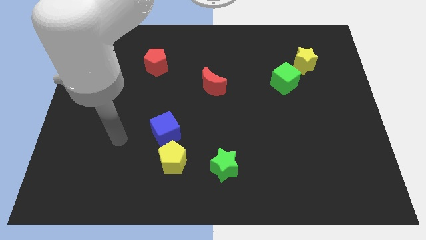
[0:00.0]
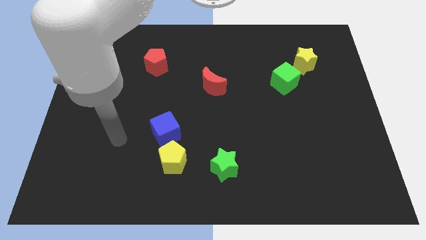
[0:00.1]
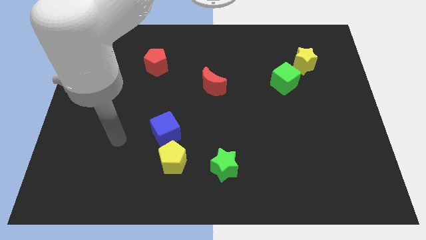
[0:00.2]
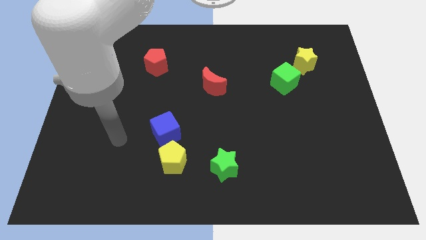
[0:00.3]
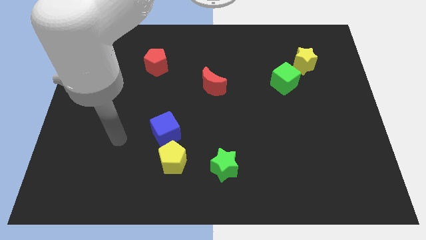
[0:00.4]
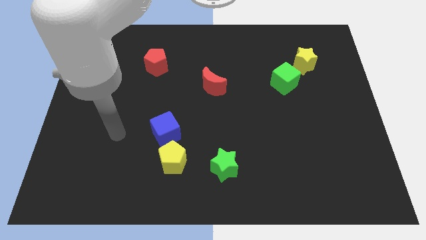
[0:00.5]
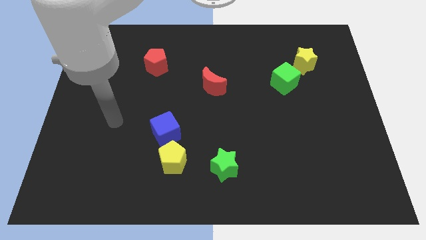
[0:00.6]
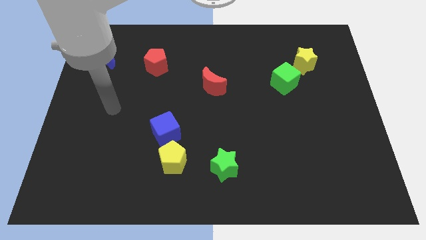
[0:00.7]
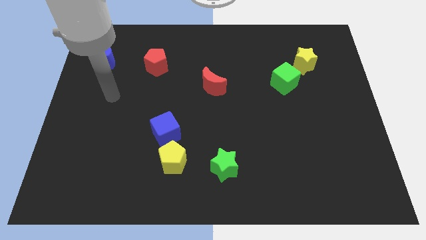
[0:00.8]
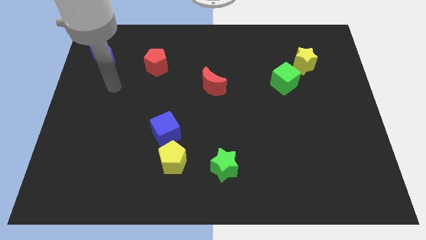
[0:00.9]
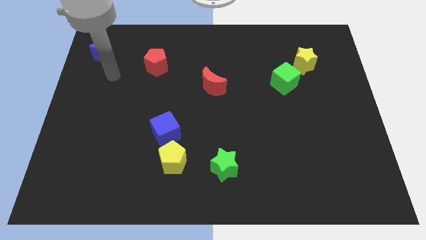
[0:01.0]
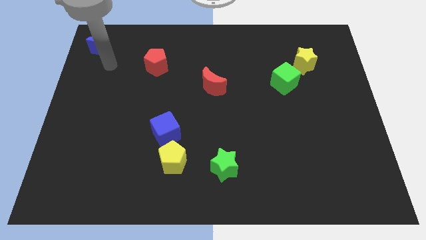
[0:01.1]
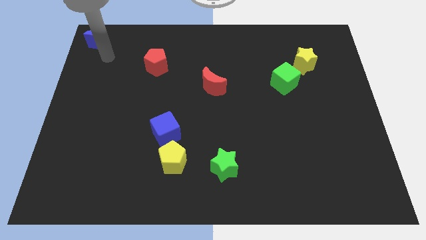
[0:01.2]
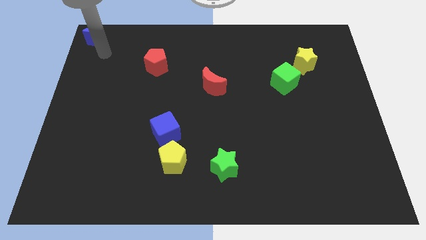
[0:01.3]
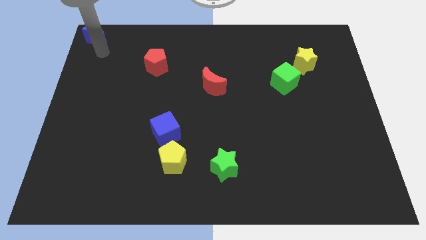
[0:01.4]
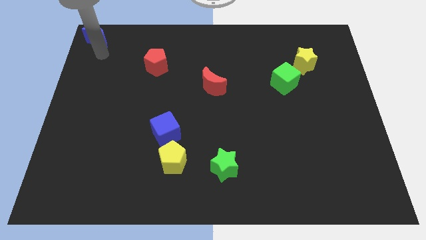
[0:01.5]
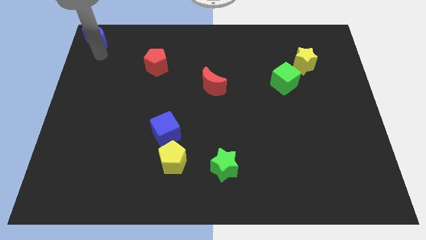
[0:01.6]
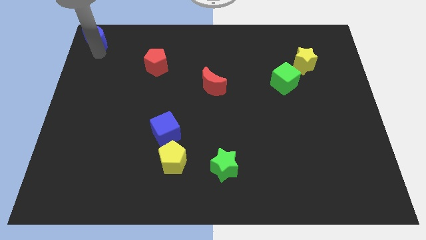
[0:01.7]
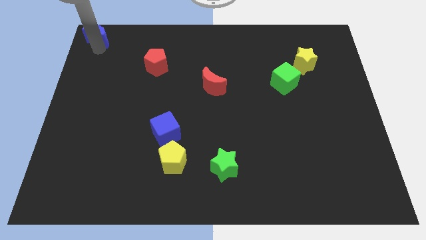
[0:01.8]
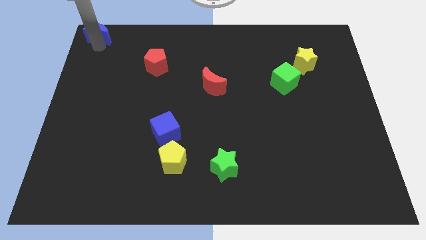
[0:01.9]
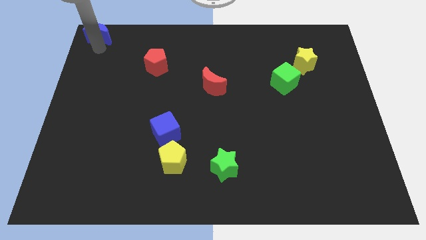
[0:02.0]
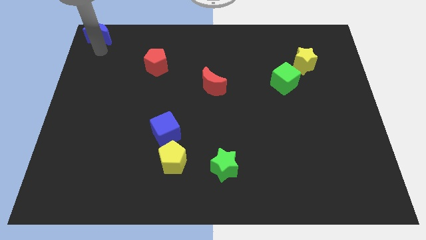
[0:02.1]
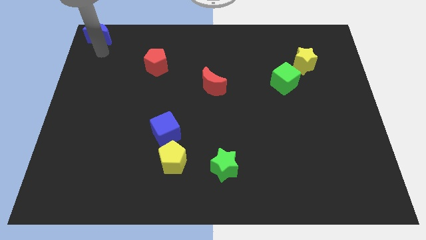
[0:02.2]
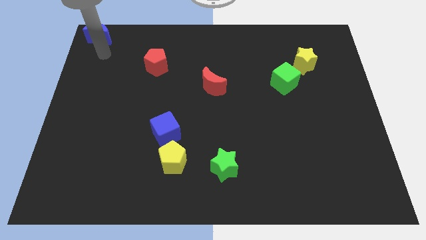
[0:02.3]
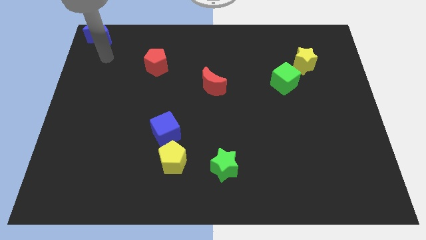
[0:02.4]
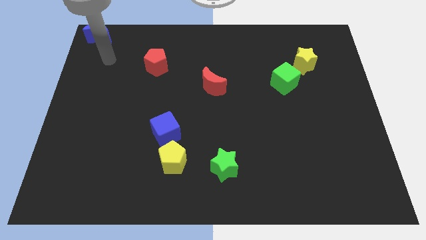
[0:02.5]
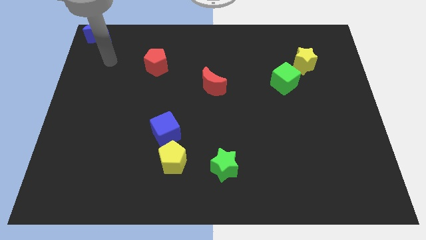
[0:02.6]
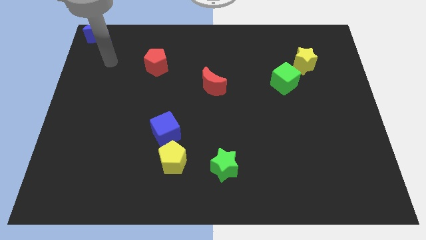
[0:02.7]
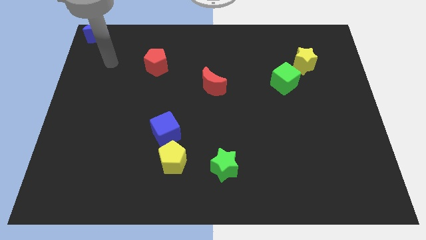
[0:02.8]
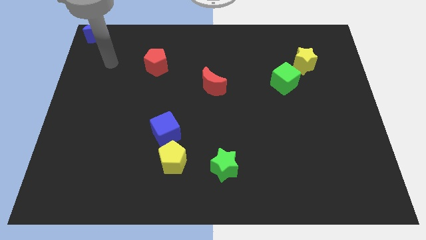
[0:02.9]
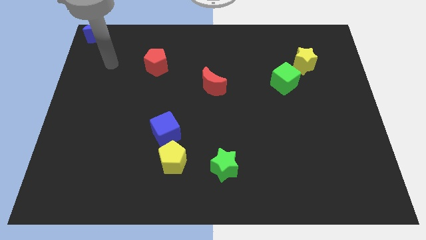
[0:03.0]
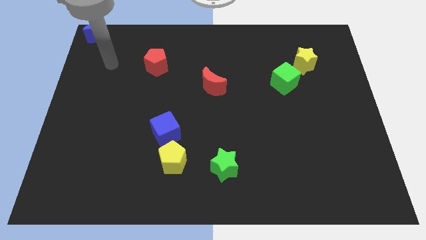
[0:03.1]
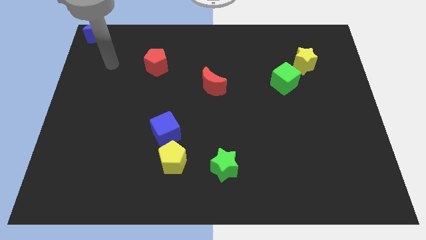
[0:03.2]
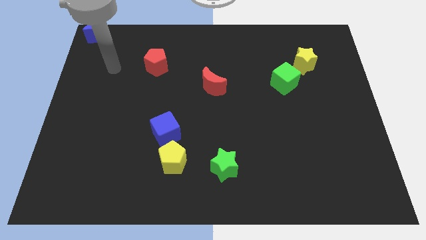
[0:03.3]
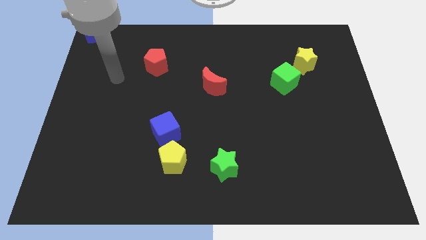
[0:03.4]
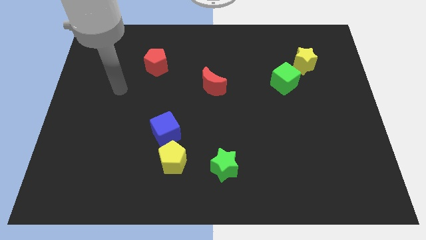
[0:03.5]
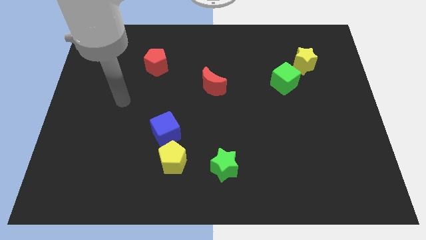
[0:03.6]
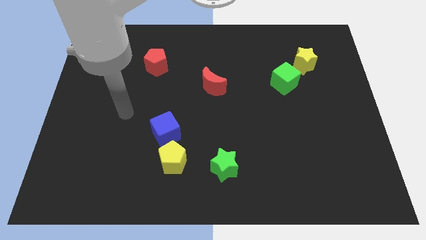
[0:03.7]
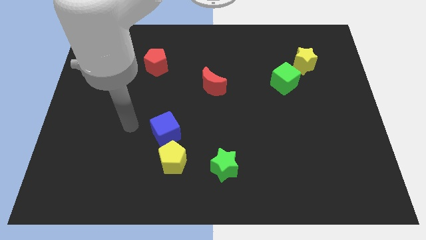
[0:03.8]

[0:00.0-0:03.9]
push the blue moon upward

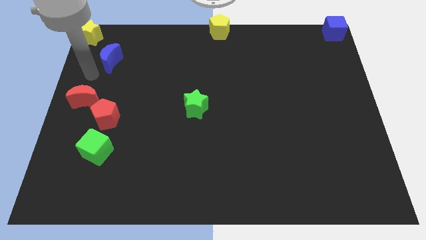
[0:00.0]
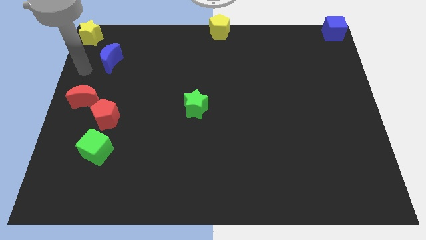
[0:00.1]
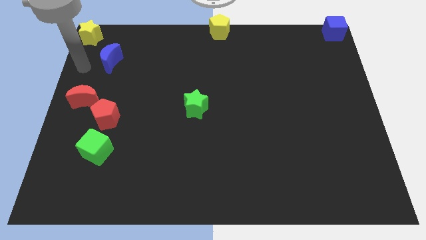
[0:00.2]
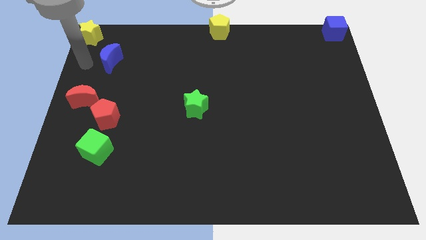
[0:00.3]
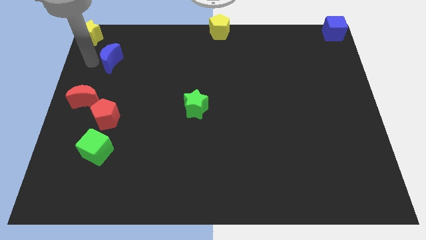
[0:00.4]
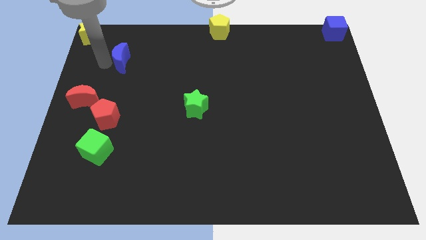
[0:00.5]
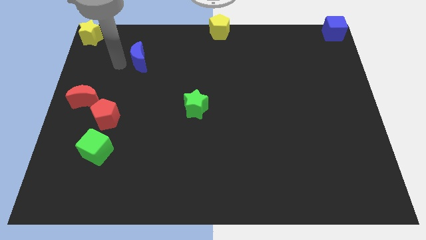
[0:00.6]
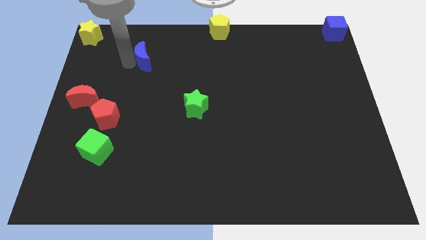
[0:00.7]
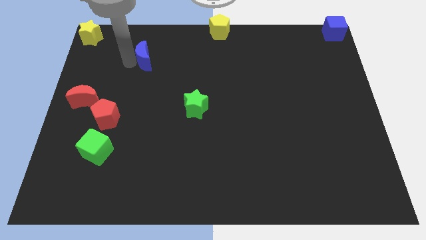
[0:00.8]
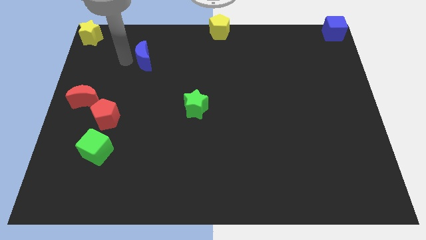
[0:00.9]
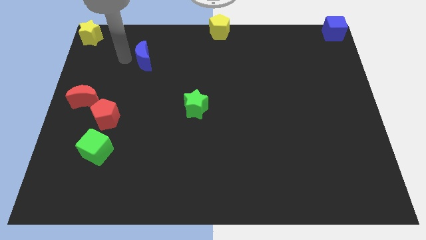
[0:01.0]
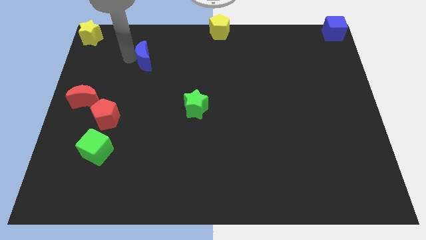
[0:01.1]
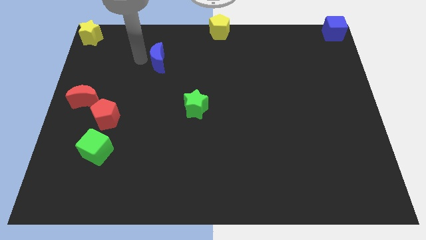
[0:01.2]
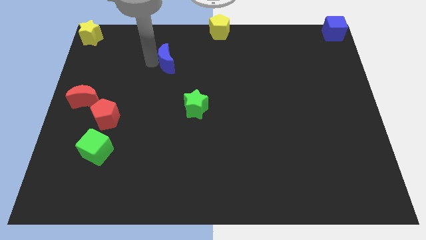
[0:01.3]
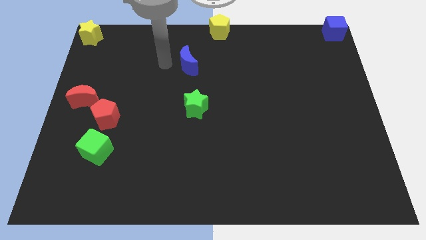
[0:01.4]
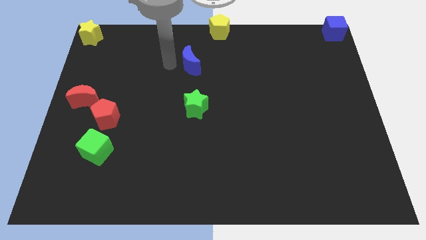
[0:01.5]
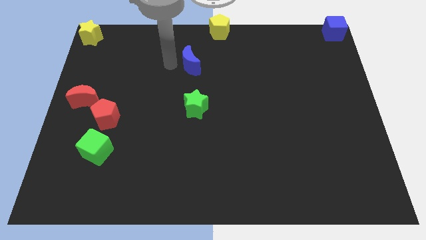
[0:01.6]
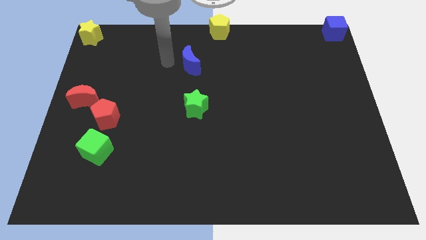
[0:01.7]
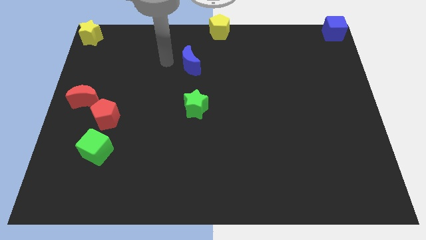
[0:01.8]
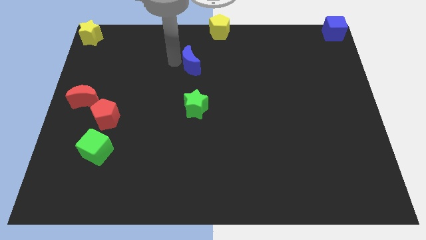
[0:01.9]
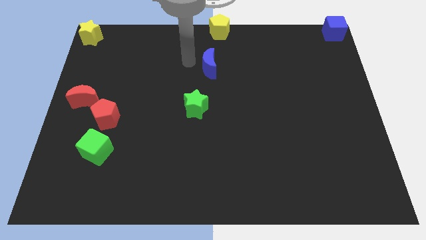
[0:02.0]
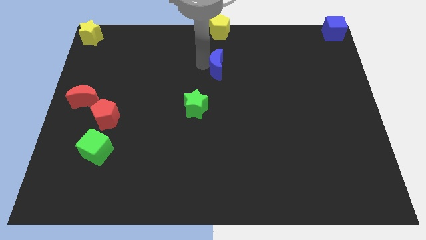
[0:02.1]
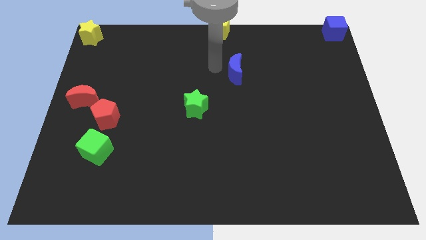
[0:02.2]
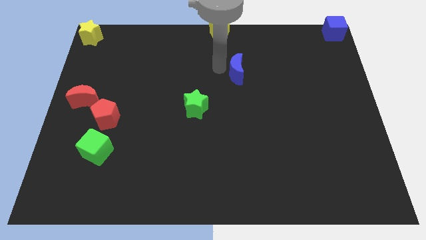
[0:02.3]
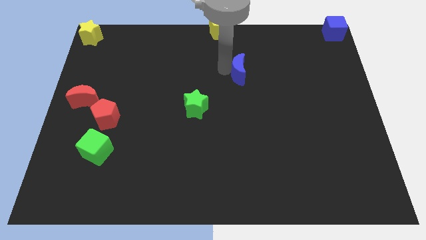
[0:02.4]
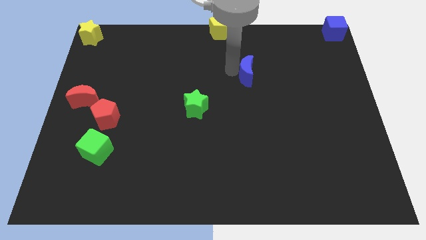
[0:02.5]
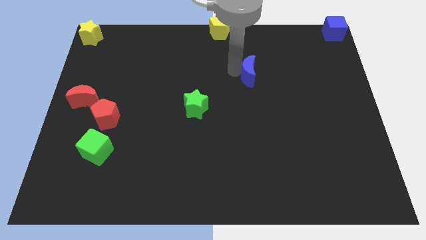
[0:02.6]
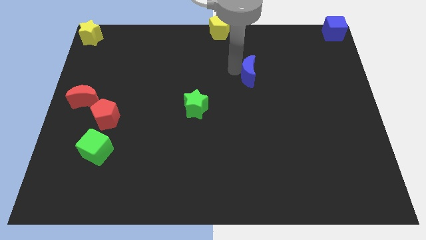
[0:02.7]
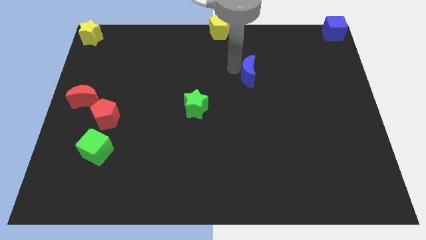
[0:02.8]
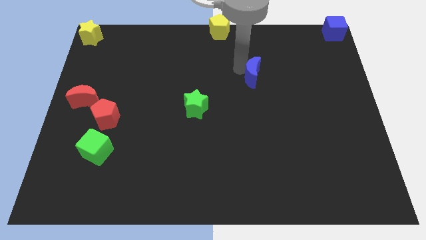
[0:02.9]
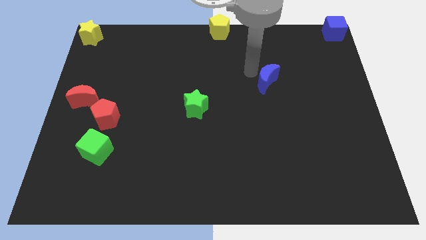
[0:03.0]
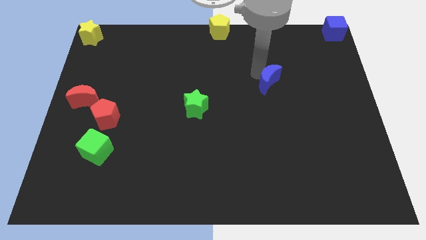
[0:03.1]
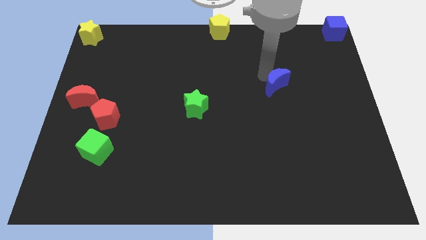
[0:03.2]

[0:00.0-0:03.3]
push the blue moon diagonally bottom right to the yellow pentagon

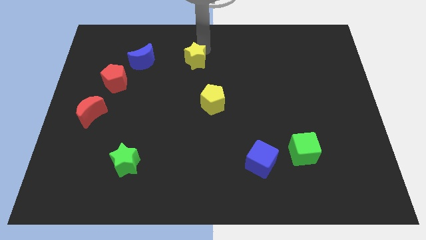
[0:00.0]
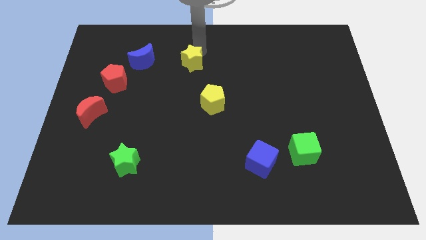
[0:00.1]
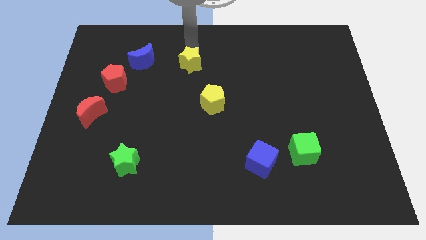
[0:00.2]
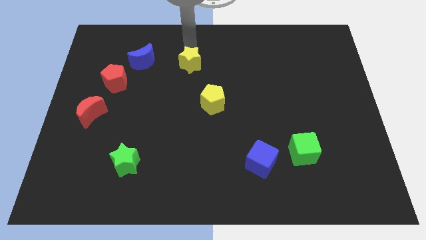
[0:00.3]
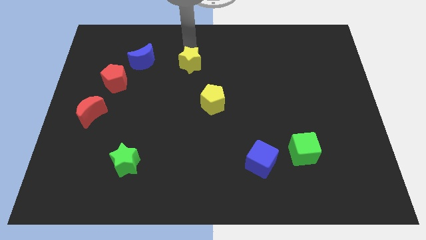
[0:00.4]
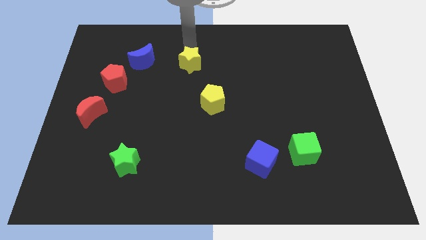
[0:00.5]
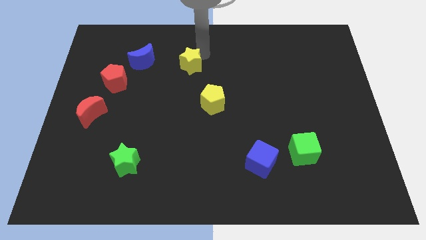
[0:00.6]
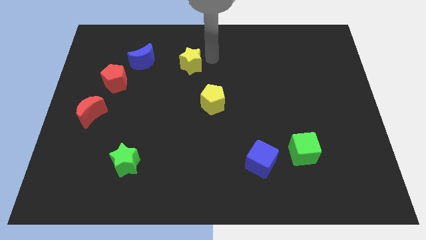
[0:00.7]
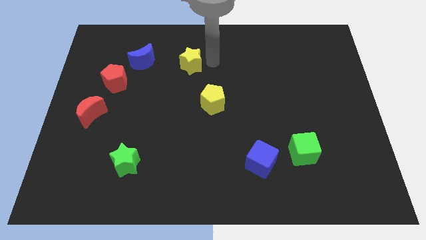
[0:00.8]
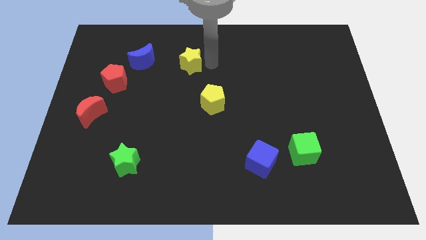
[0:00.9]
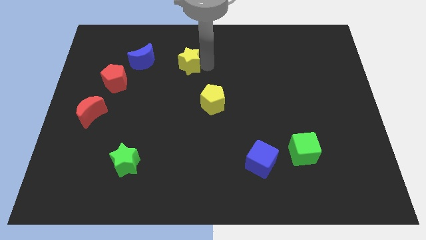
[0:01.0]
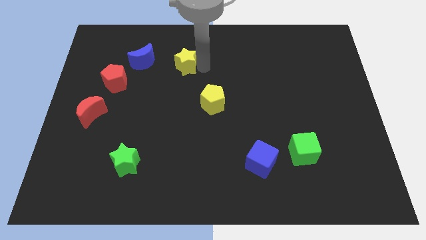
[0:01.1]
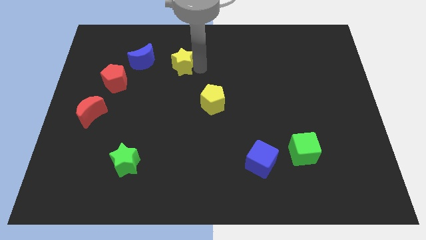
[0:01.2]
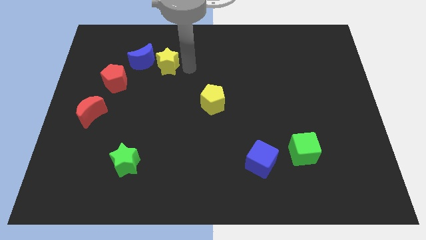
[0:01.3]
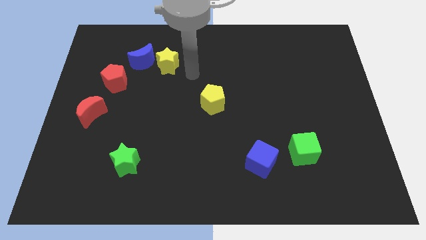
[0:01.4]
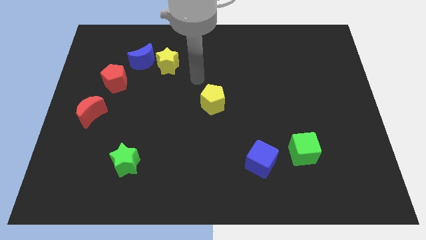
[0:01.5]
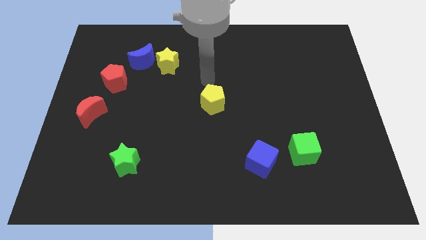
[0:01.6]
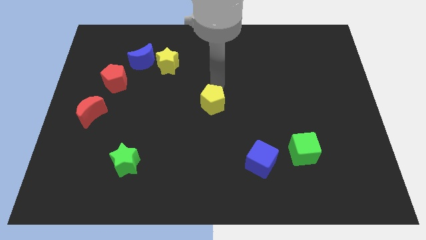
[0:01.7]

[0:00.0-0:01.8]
push the yellow star towards the blue crescent
